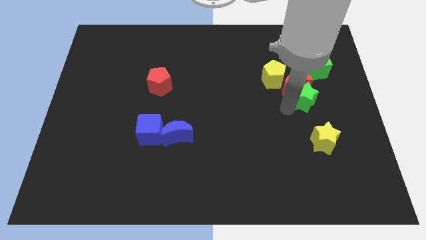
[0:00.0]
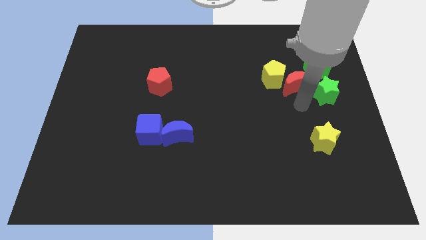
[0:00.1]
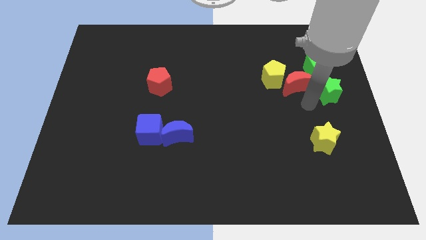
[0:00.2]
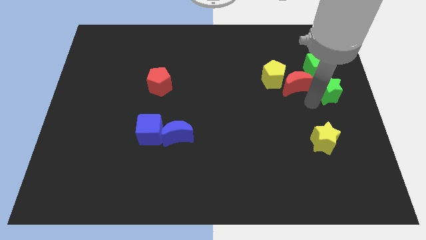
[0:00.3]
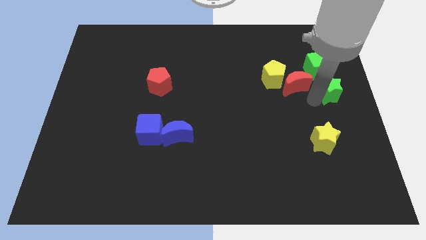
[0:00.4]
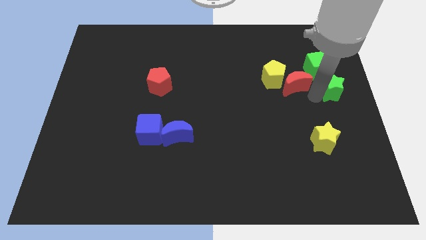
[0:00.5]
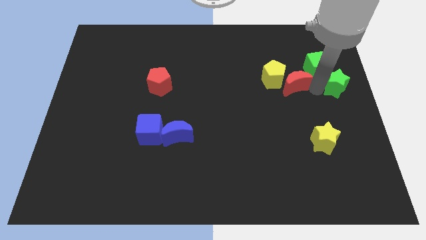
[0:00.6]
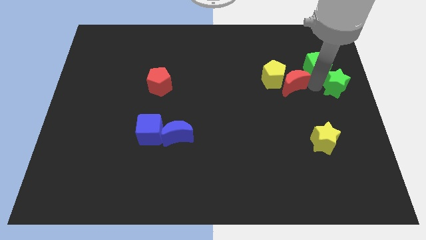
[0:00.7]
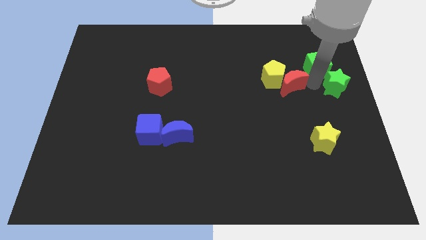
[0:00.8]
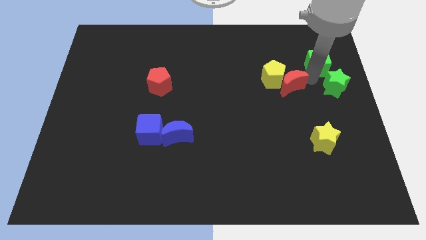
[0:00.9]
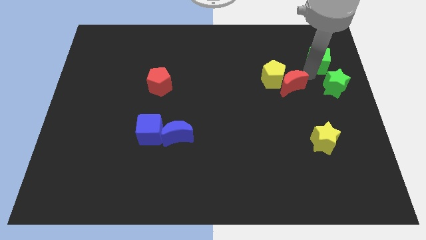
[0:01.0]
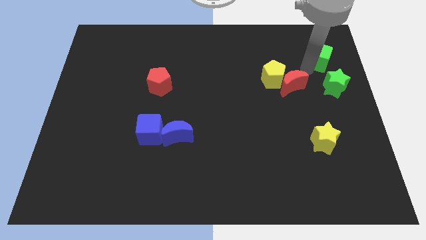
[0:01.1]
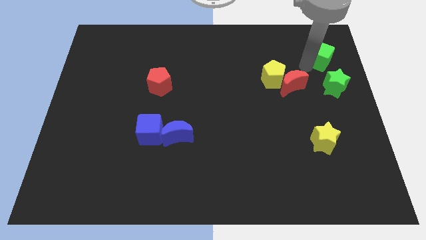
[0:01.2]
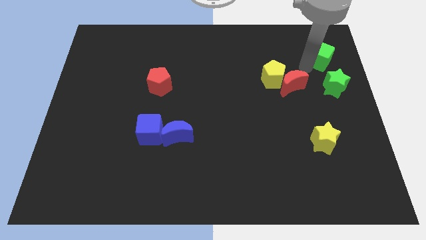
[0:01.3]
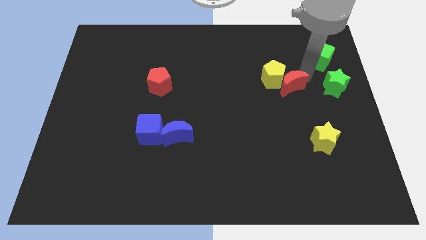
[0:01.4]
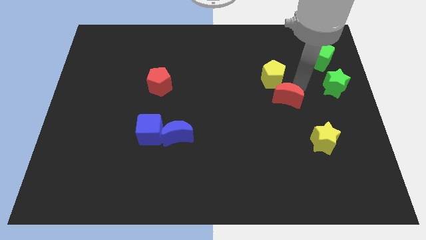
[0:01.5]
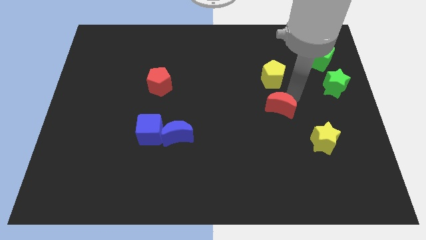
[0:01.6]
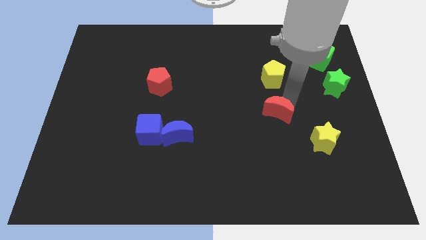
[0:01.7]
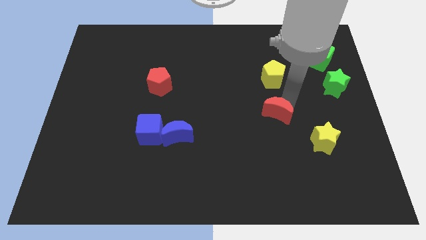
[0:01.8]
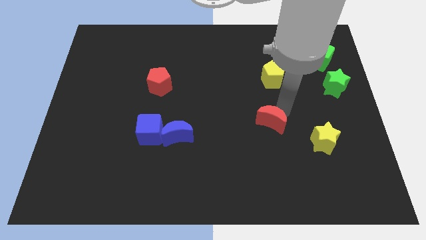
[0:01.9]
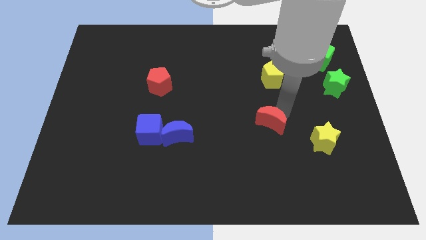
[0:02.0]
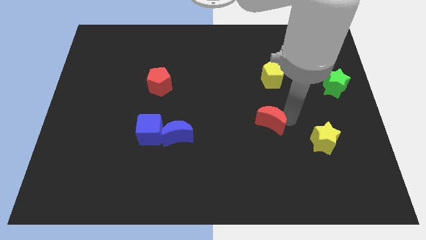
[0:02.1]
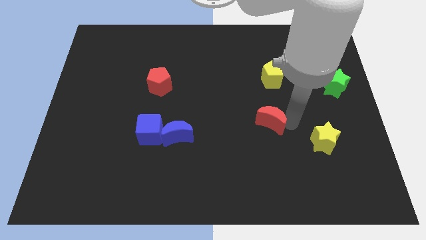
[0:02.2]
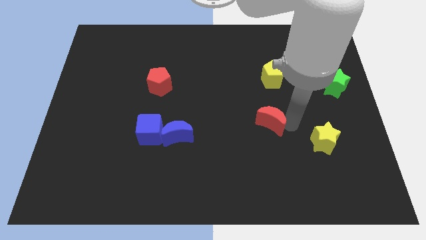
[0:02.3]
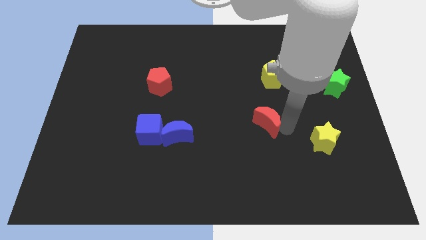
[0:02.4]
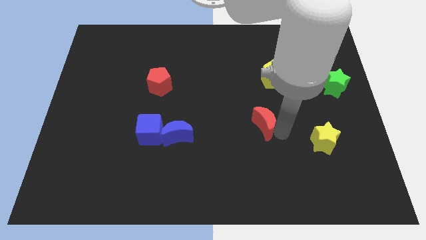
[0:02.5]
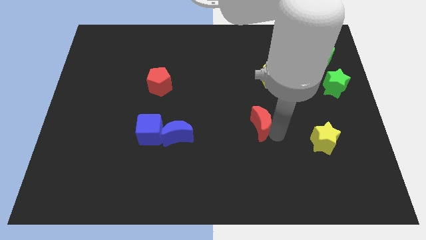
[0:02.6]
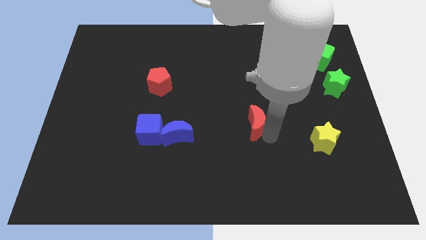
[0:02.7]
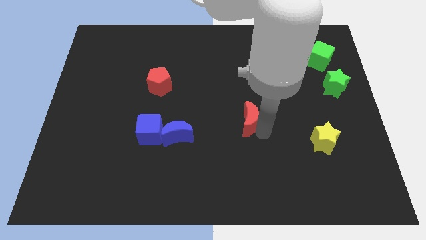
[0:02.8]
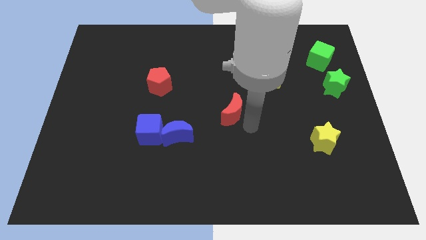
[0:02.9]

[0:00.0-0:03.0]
separate the red moon from the group of green blocks

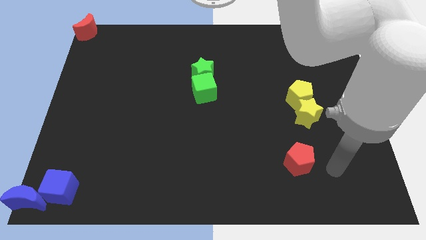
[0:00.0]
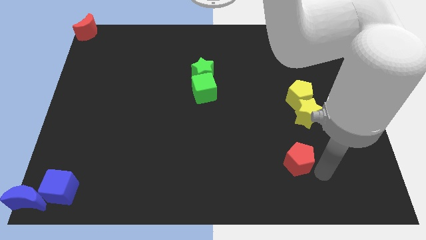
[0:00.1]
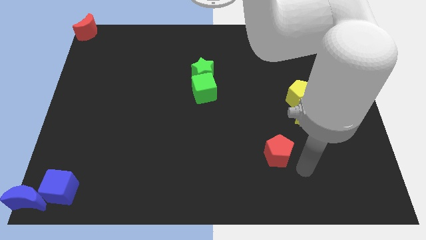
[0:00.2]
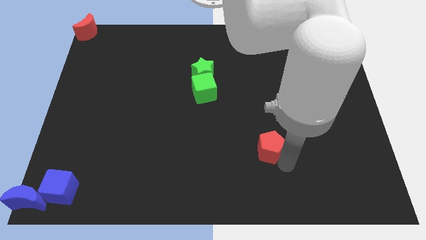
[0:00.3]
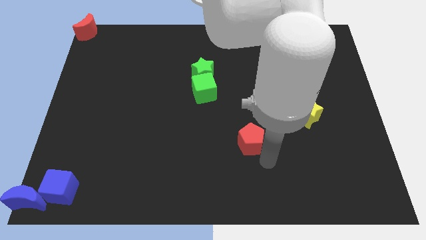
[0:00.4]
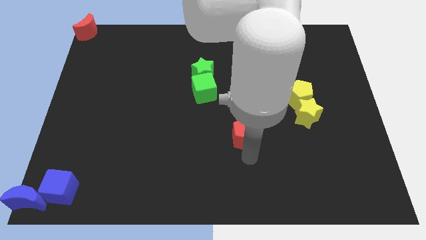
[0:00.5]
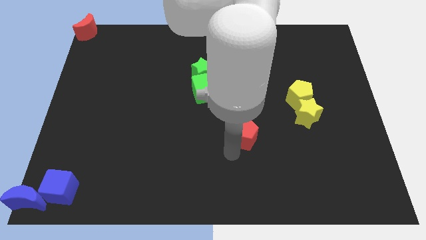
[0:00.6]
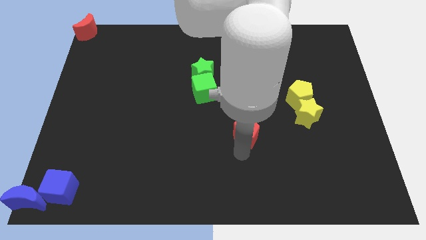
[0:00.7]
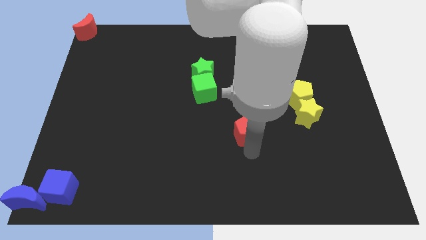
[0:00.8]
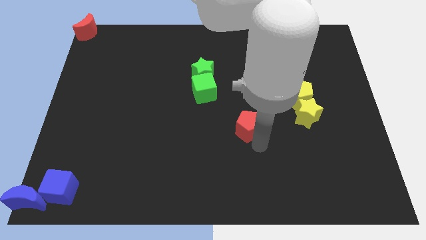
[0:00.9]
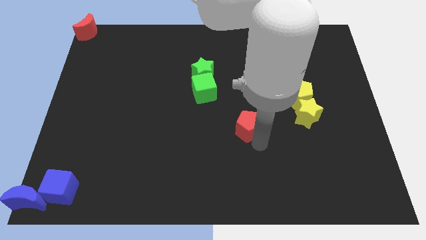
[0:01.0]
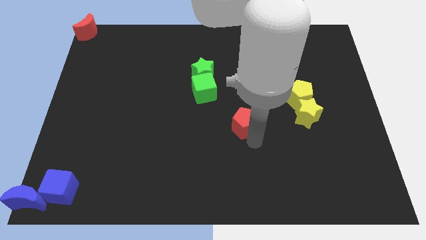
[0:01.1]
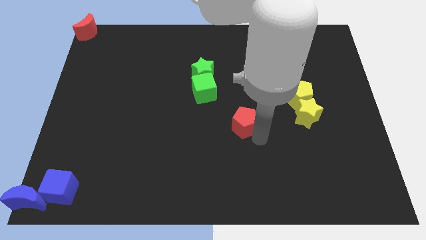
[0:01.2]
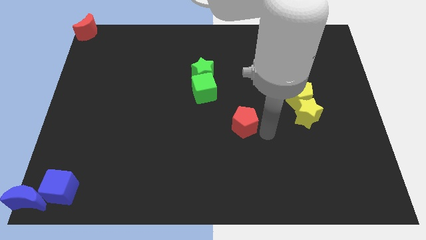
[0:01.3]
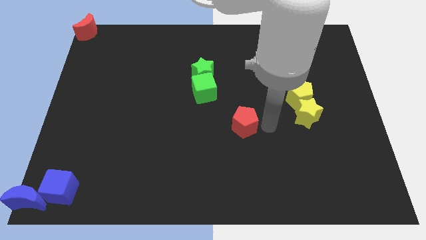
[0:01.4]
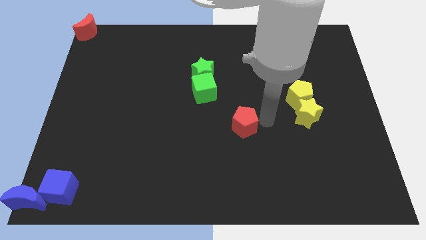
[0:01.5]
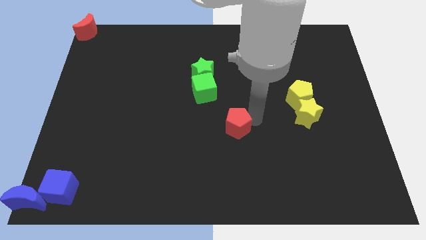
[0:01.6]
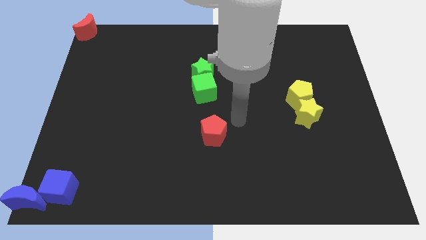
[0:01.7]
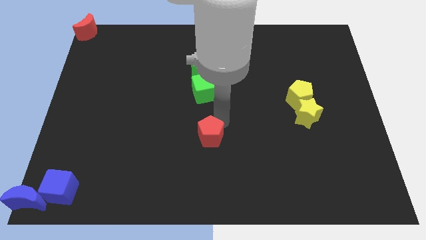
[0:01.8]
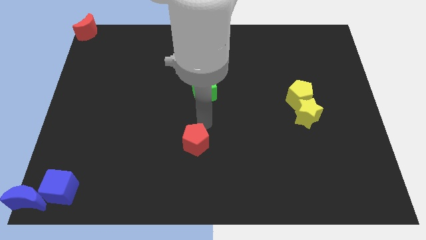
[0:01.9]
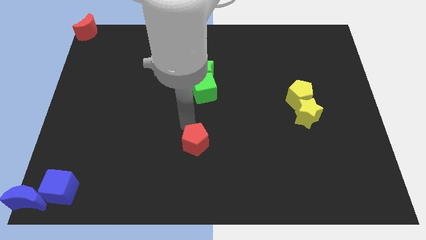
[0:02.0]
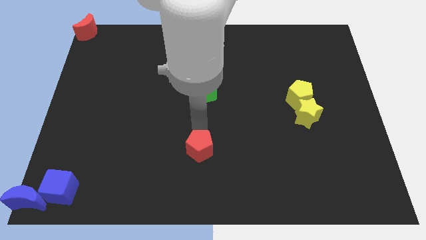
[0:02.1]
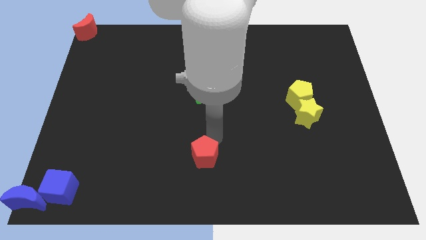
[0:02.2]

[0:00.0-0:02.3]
move the red pentagon to the bottom side of the group of green blocks

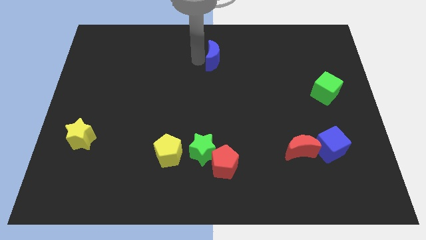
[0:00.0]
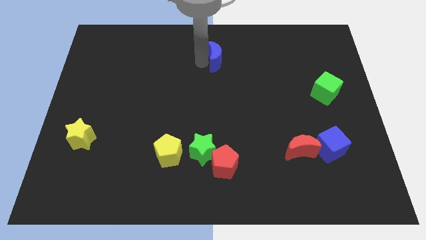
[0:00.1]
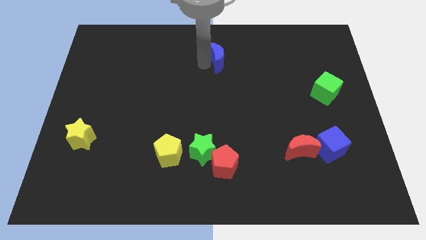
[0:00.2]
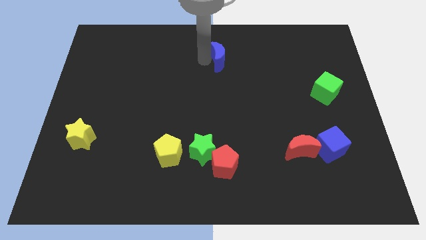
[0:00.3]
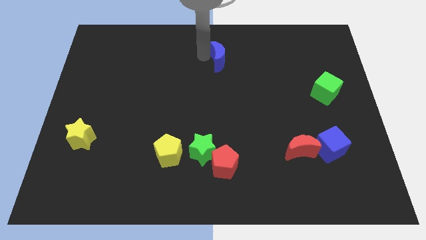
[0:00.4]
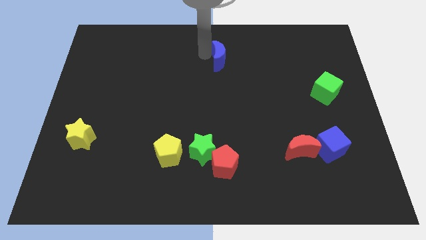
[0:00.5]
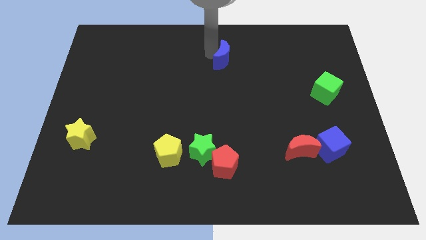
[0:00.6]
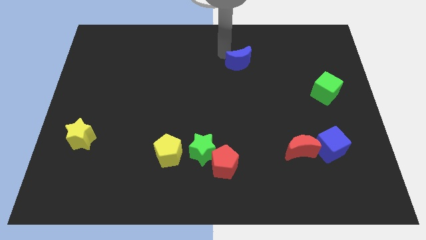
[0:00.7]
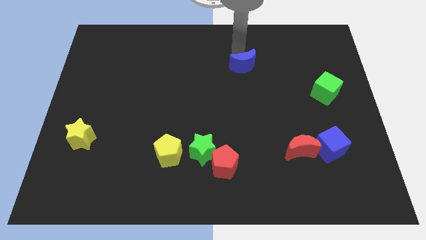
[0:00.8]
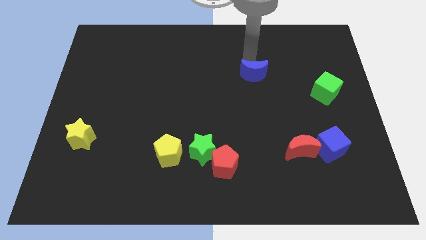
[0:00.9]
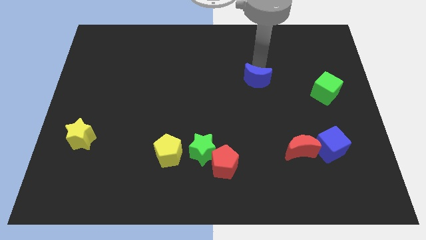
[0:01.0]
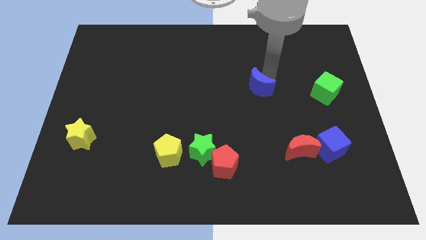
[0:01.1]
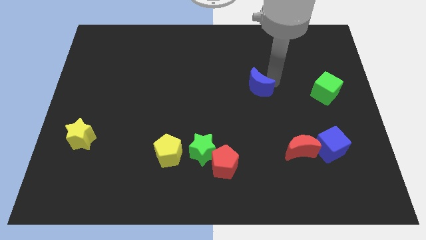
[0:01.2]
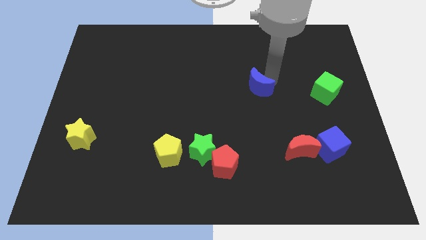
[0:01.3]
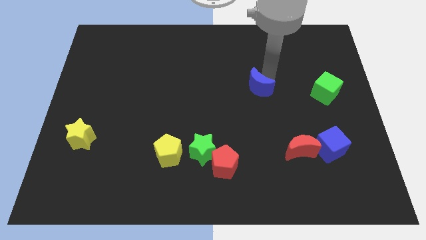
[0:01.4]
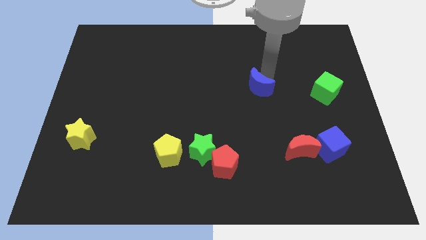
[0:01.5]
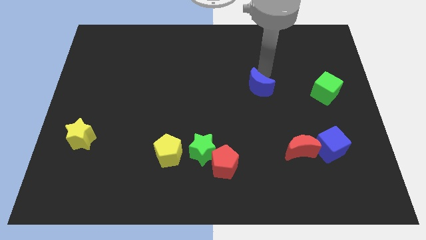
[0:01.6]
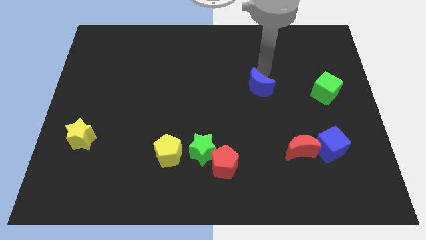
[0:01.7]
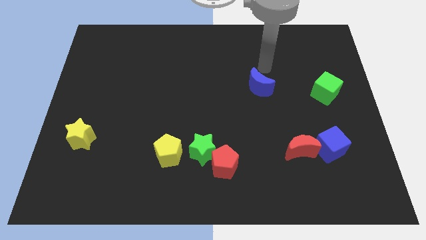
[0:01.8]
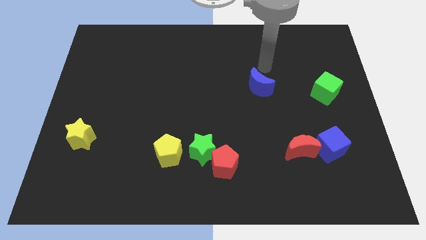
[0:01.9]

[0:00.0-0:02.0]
place the blue moon diagonally to the red moon

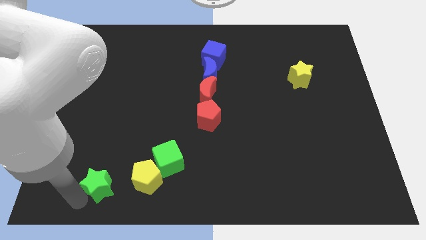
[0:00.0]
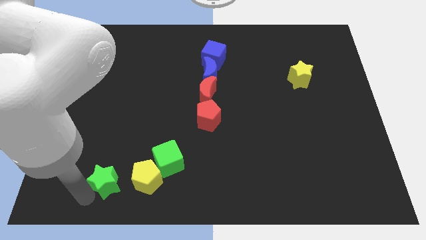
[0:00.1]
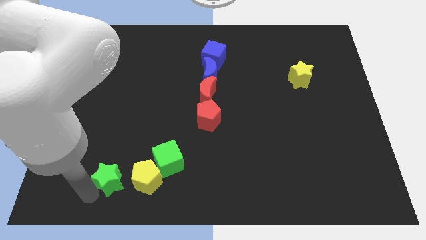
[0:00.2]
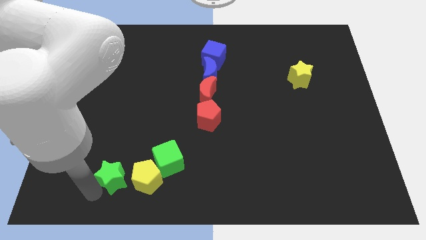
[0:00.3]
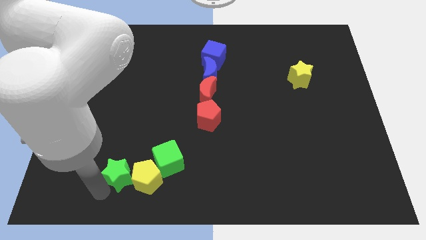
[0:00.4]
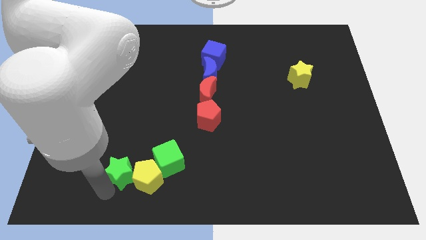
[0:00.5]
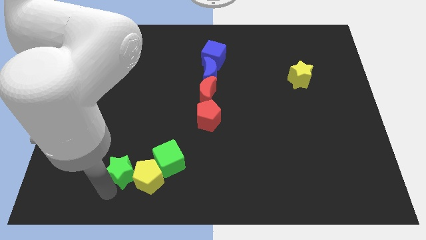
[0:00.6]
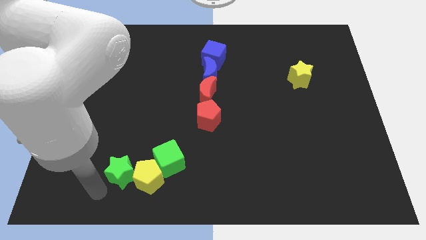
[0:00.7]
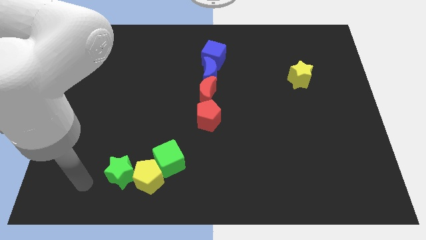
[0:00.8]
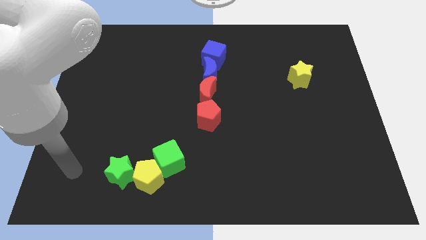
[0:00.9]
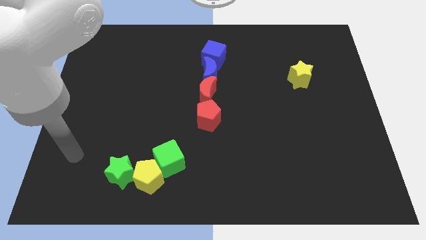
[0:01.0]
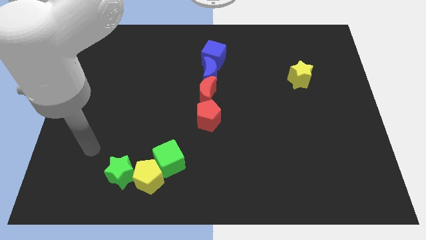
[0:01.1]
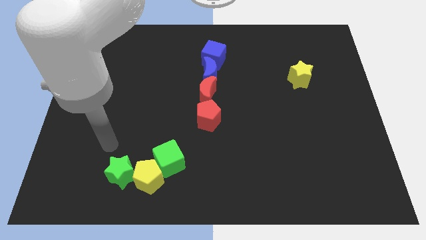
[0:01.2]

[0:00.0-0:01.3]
push the green star into the yellow pentagon

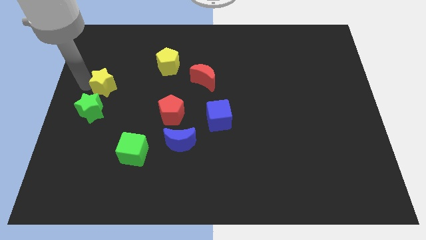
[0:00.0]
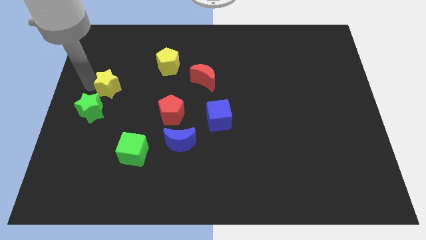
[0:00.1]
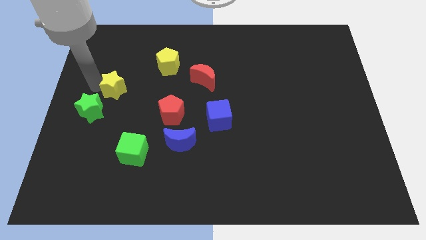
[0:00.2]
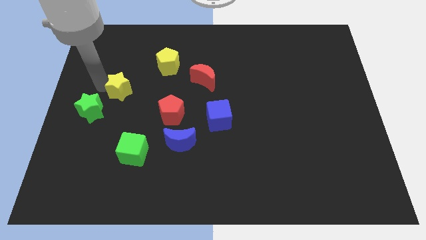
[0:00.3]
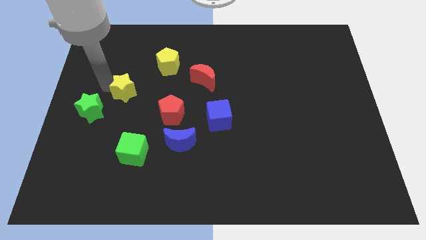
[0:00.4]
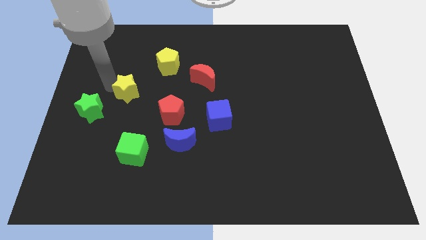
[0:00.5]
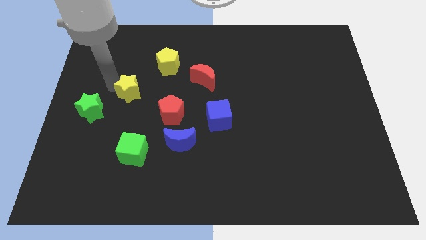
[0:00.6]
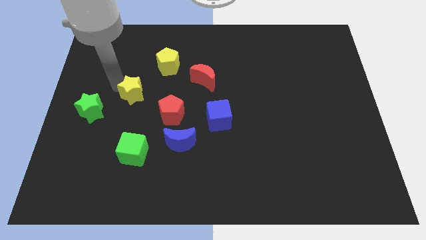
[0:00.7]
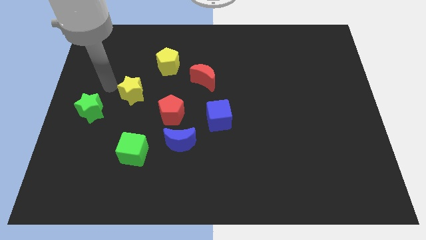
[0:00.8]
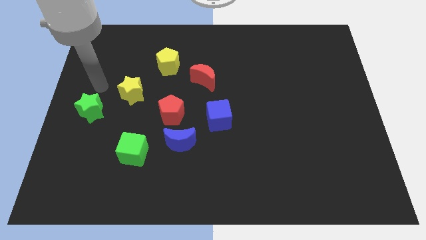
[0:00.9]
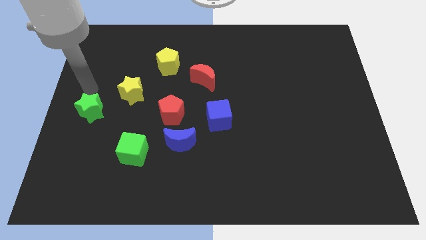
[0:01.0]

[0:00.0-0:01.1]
slightly push the yellow star to the red pentagon
